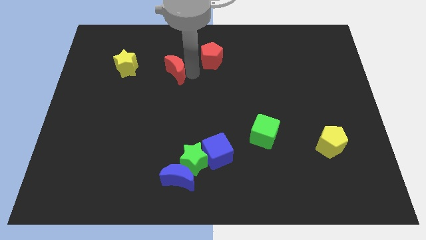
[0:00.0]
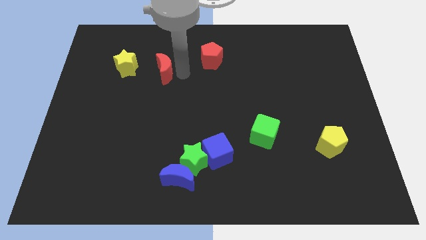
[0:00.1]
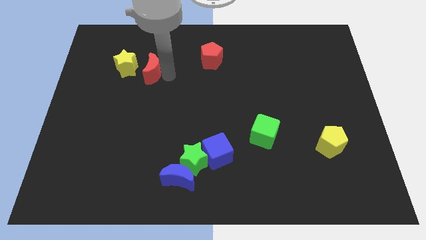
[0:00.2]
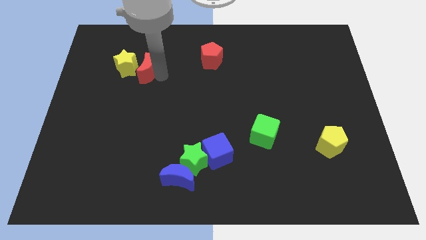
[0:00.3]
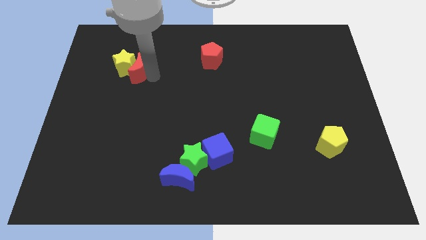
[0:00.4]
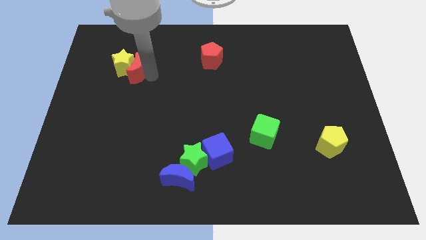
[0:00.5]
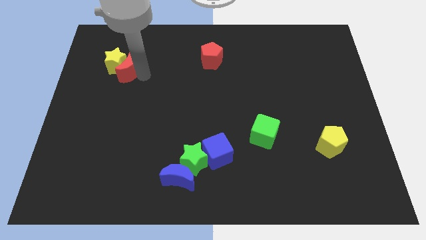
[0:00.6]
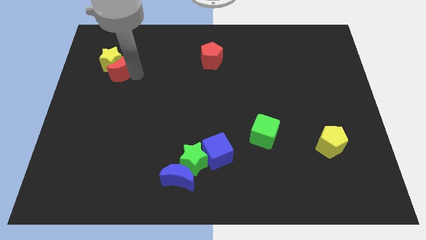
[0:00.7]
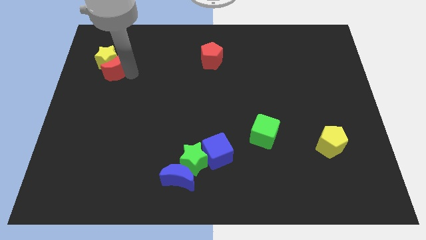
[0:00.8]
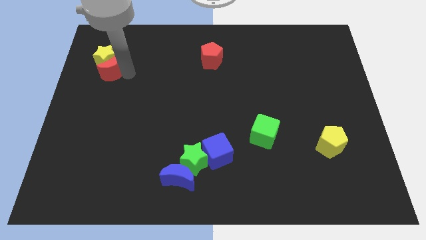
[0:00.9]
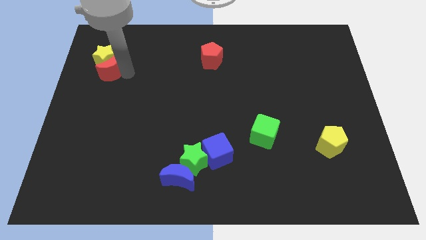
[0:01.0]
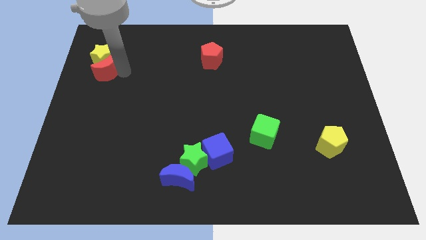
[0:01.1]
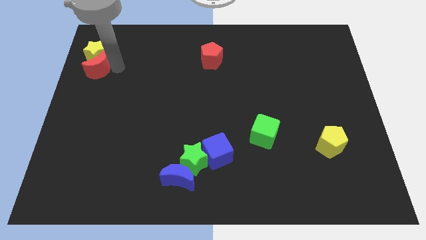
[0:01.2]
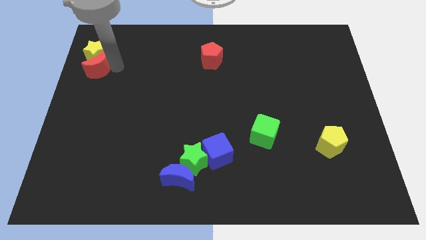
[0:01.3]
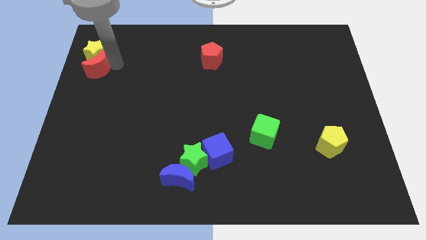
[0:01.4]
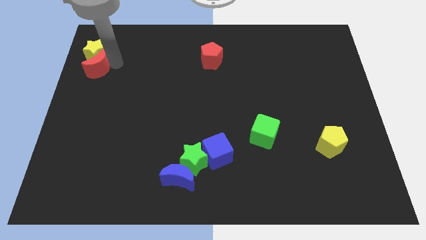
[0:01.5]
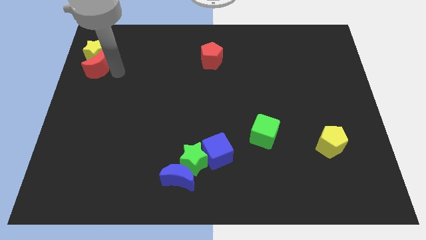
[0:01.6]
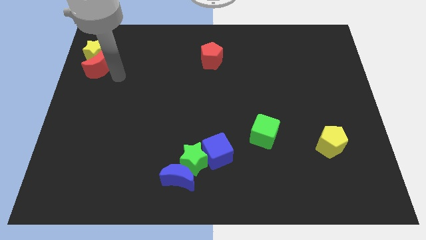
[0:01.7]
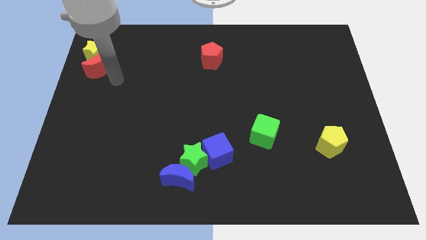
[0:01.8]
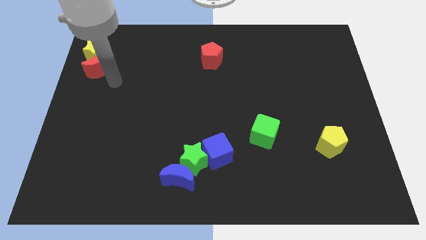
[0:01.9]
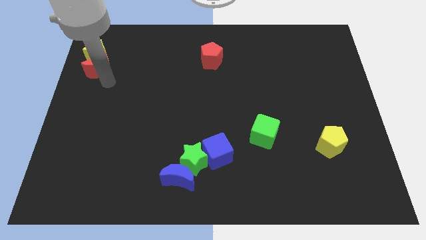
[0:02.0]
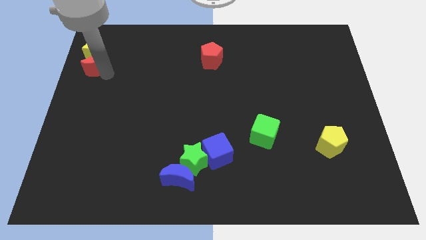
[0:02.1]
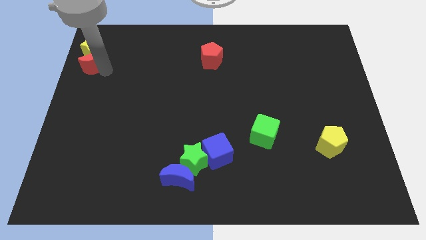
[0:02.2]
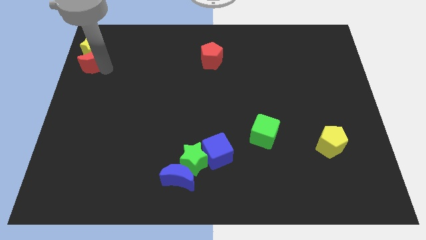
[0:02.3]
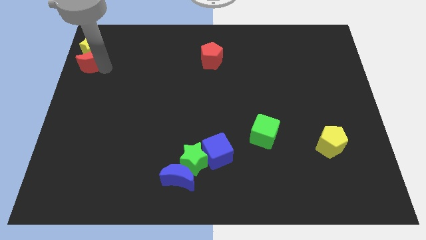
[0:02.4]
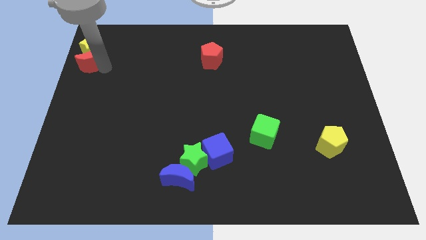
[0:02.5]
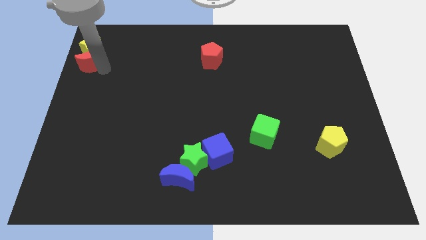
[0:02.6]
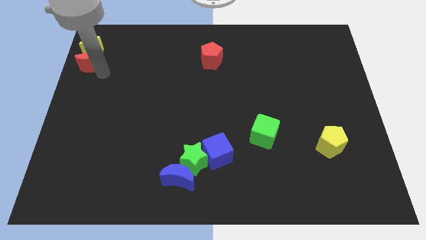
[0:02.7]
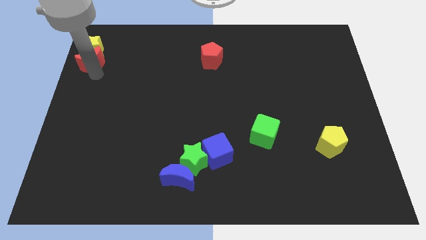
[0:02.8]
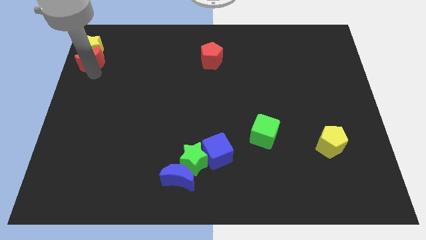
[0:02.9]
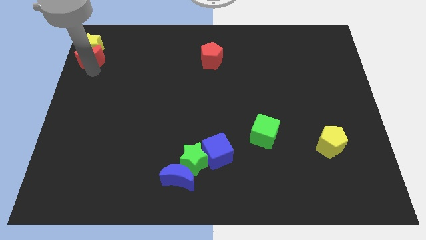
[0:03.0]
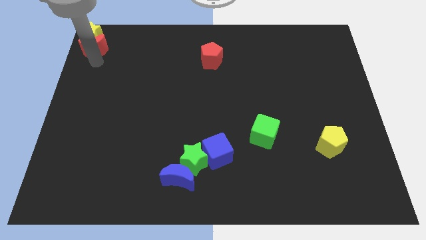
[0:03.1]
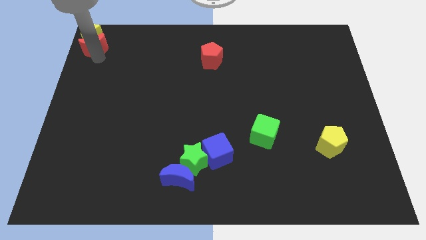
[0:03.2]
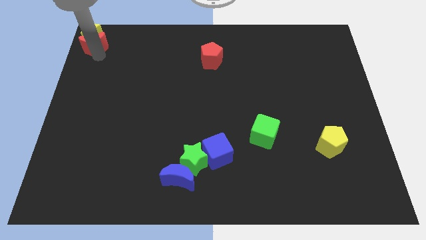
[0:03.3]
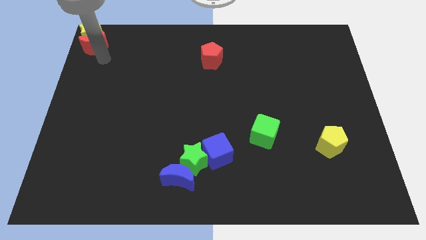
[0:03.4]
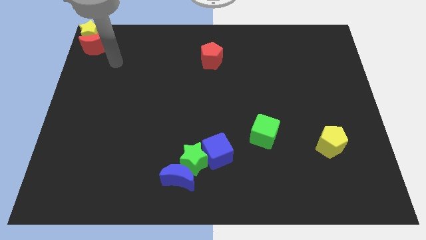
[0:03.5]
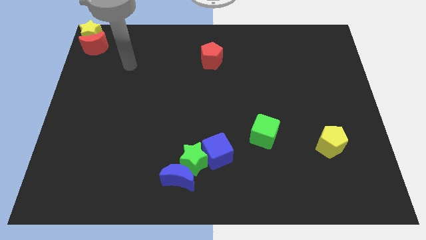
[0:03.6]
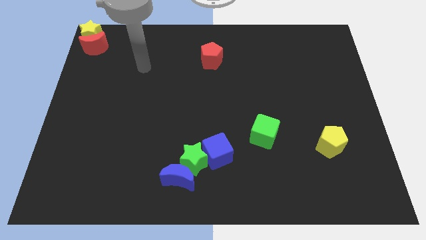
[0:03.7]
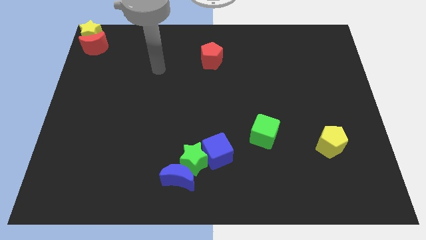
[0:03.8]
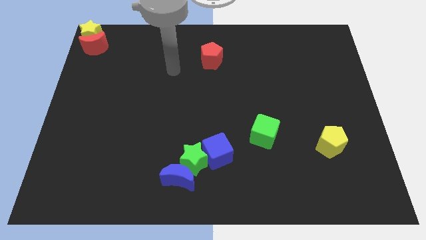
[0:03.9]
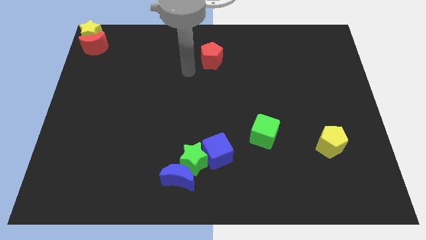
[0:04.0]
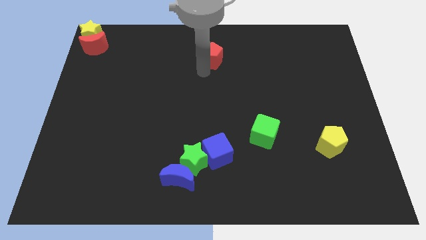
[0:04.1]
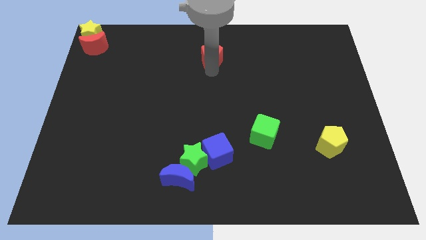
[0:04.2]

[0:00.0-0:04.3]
push the red moon and red pentagon at the top left corner of the board

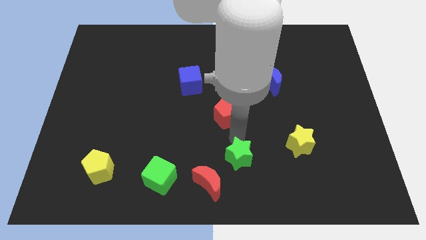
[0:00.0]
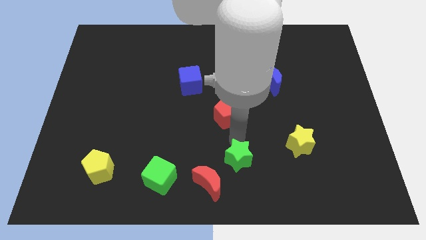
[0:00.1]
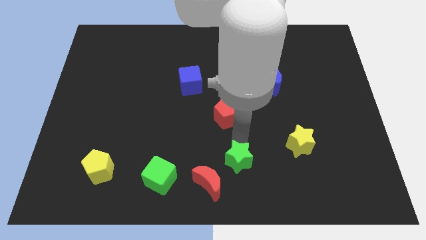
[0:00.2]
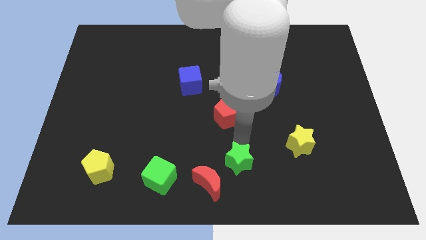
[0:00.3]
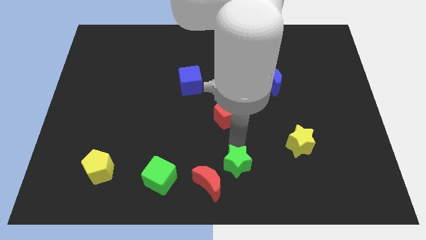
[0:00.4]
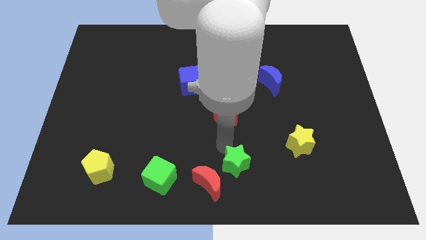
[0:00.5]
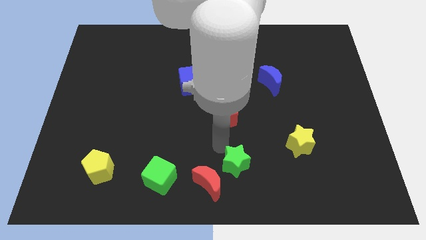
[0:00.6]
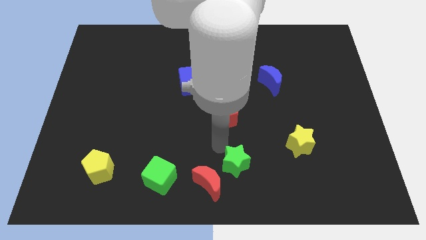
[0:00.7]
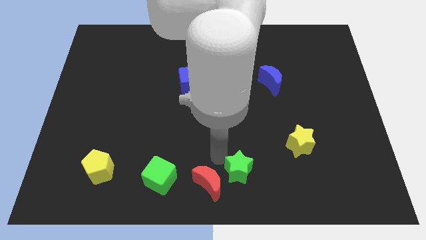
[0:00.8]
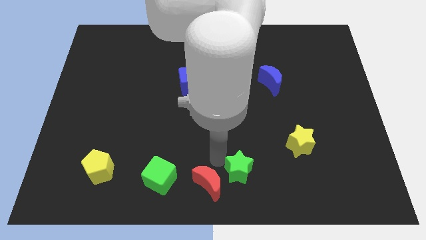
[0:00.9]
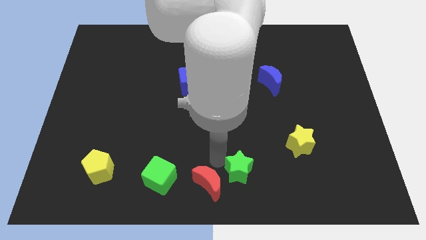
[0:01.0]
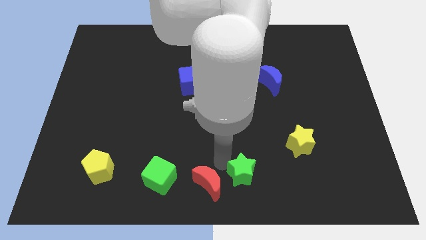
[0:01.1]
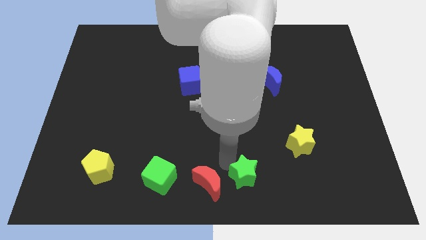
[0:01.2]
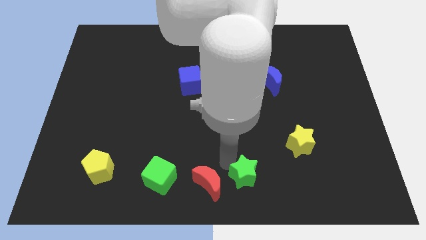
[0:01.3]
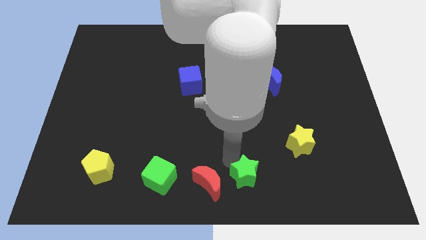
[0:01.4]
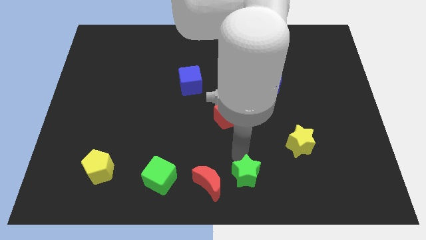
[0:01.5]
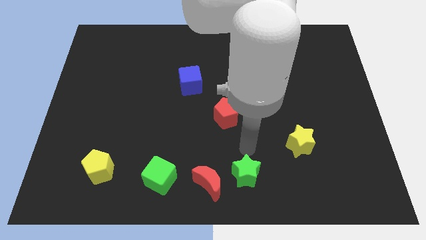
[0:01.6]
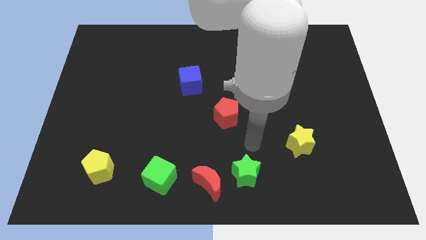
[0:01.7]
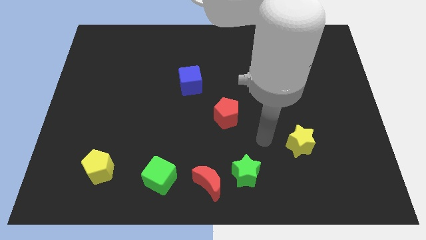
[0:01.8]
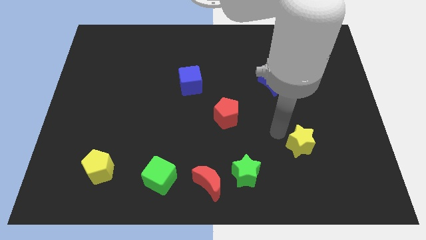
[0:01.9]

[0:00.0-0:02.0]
drag the green star to top right of red crescent

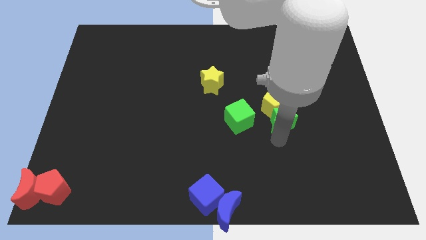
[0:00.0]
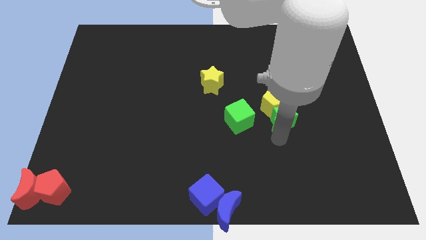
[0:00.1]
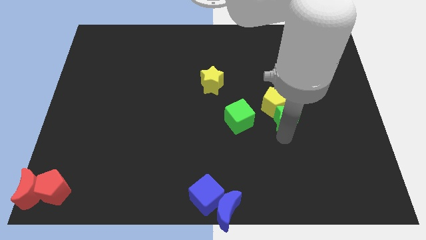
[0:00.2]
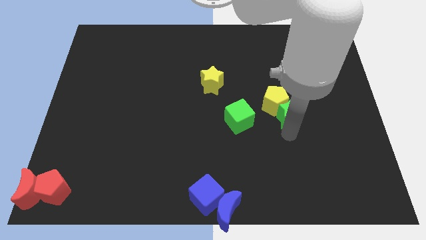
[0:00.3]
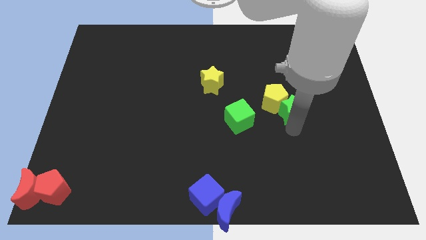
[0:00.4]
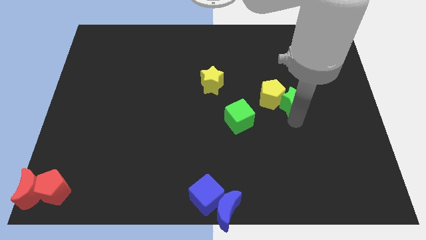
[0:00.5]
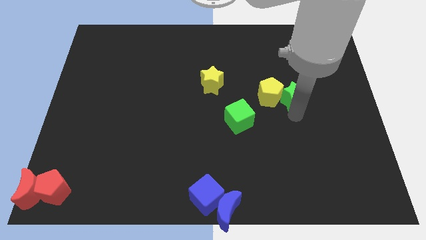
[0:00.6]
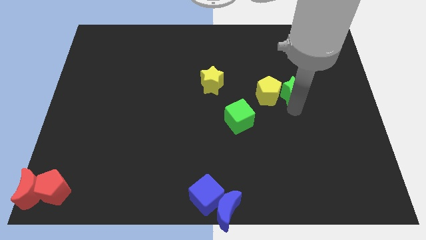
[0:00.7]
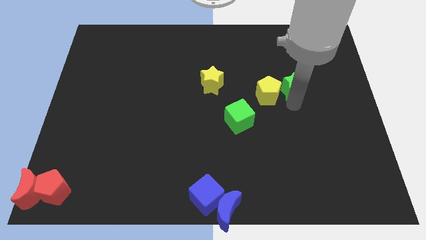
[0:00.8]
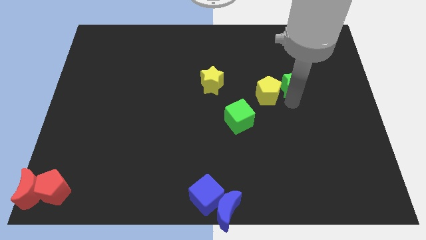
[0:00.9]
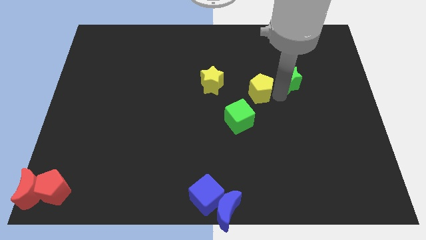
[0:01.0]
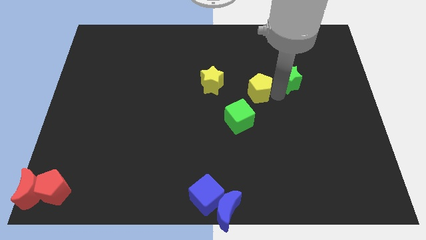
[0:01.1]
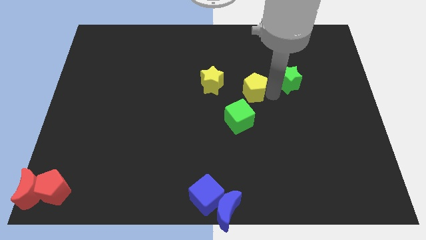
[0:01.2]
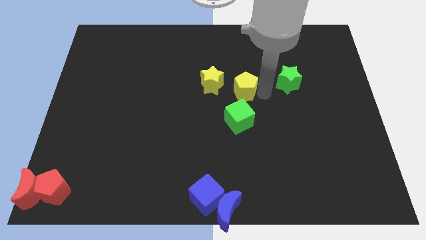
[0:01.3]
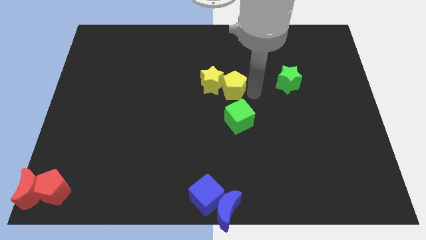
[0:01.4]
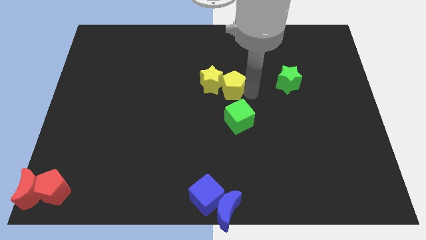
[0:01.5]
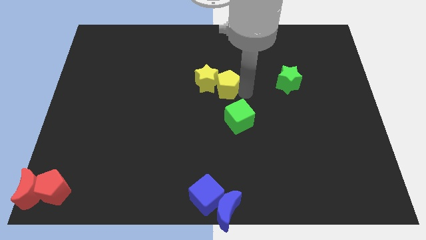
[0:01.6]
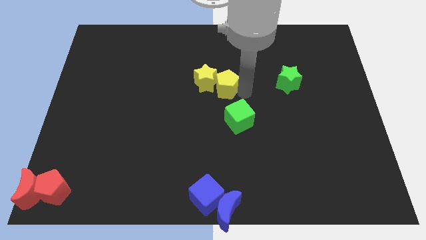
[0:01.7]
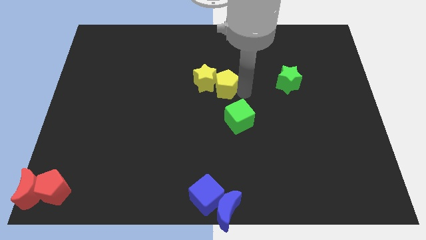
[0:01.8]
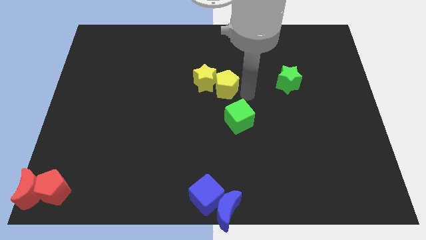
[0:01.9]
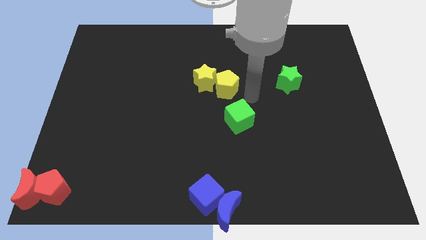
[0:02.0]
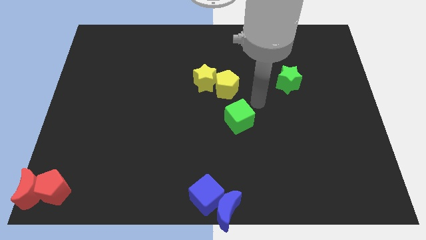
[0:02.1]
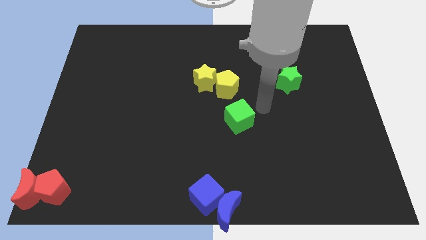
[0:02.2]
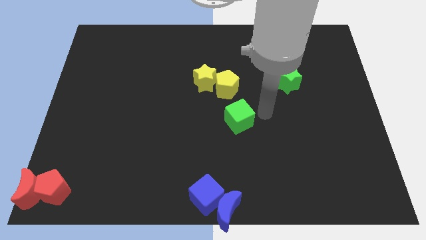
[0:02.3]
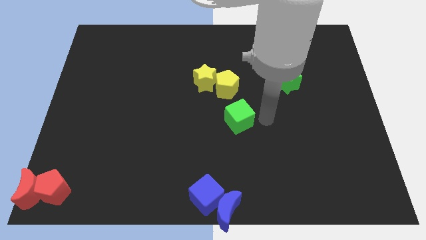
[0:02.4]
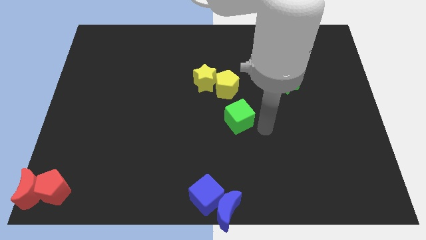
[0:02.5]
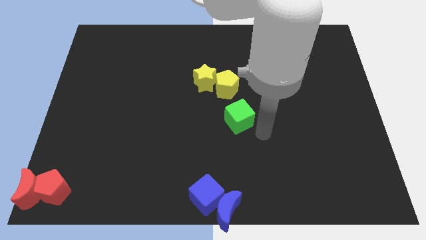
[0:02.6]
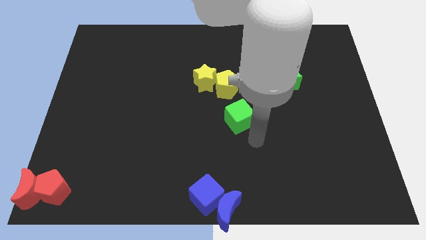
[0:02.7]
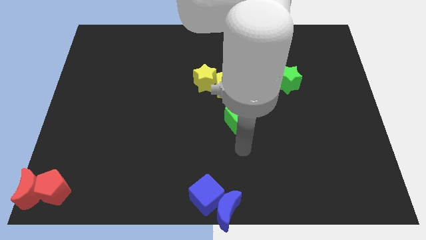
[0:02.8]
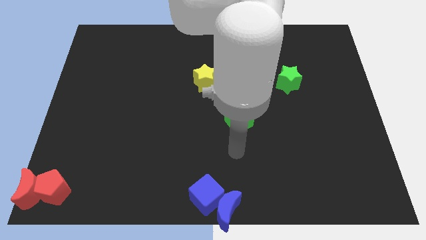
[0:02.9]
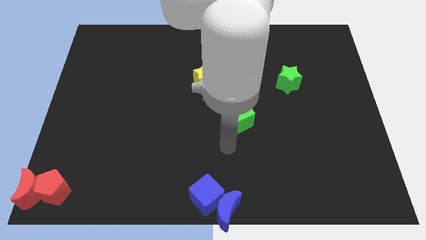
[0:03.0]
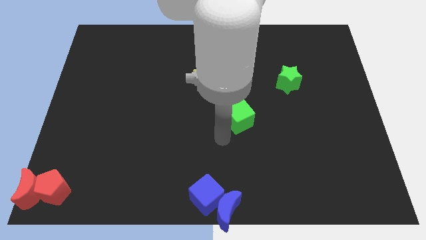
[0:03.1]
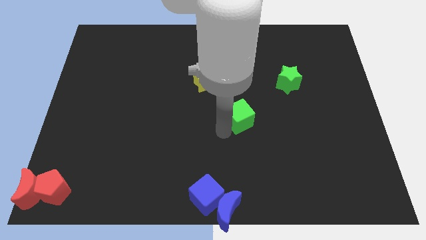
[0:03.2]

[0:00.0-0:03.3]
slide the yellow pentagon into the yellow star
